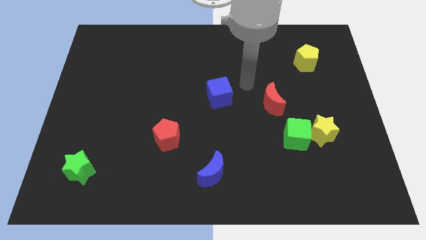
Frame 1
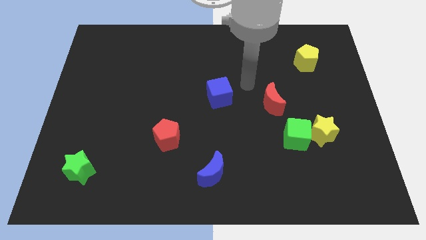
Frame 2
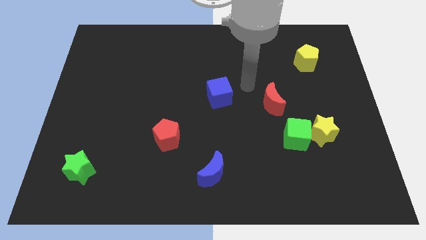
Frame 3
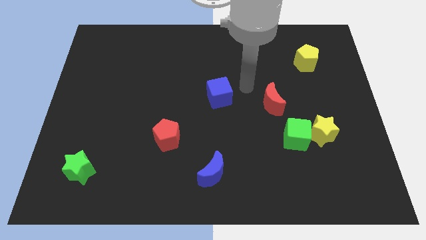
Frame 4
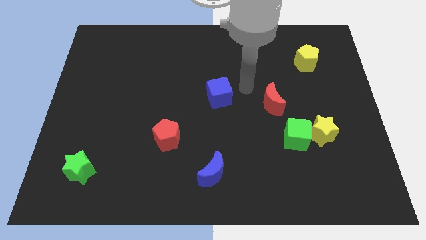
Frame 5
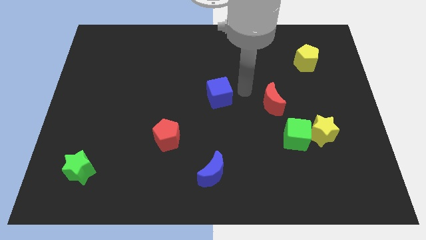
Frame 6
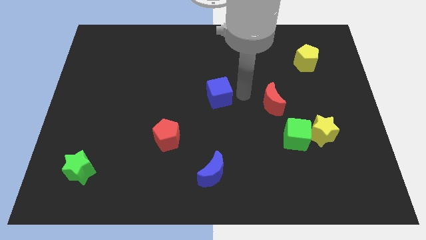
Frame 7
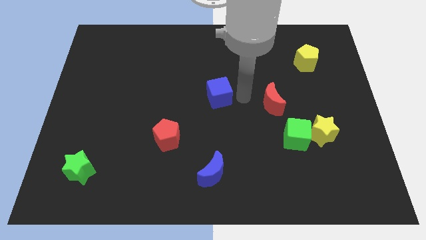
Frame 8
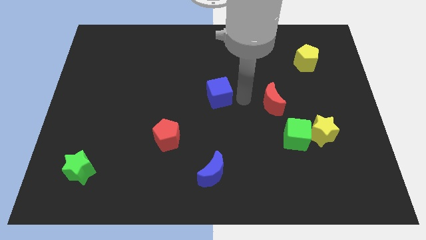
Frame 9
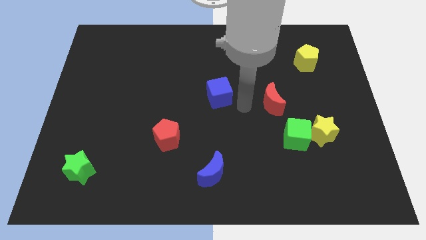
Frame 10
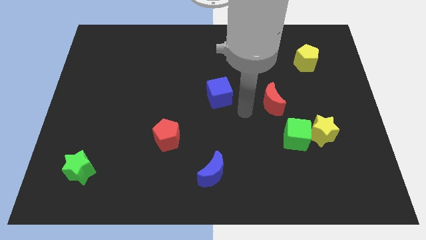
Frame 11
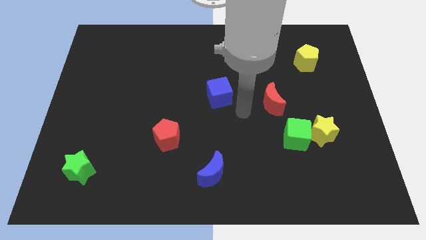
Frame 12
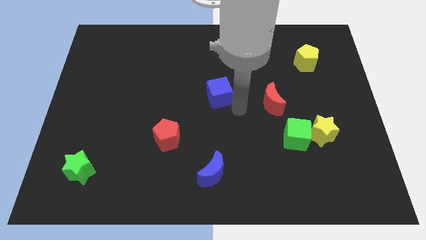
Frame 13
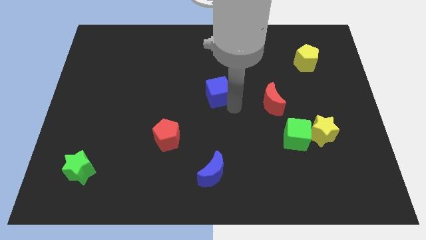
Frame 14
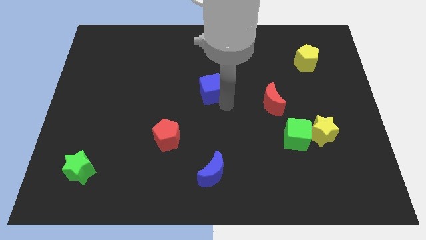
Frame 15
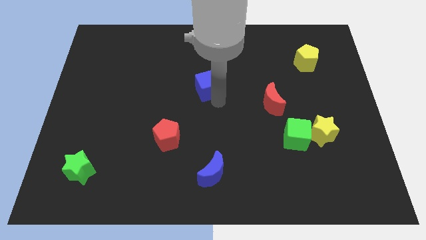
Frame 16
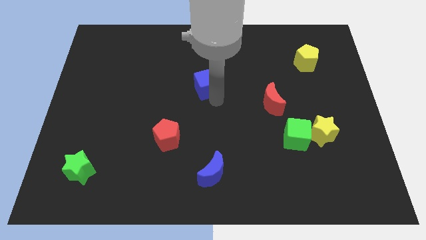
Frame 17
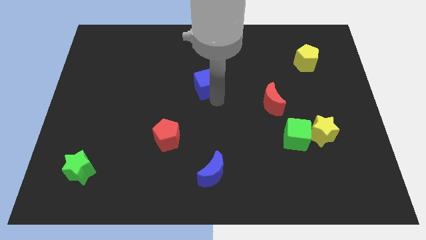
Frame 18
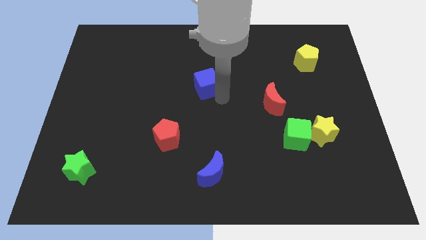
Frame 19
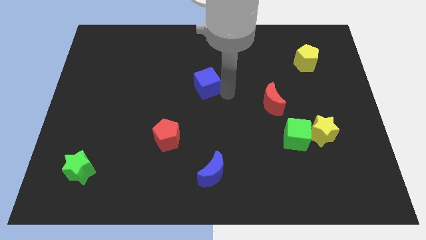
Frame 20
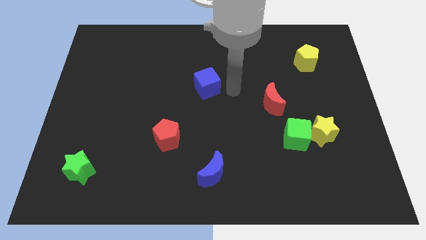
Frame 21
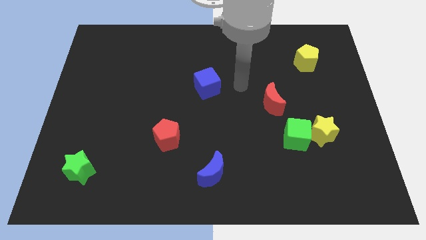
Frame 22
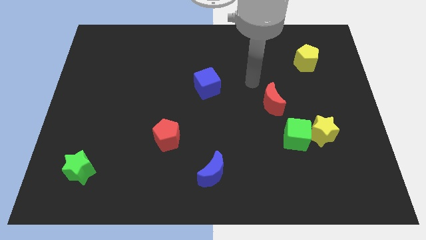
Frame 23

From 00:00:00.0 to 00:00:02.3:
push the blue cube to the center on the board

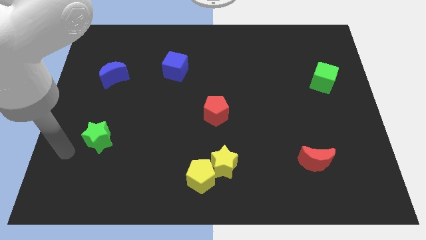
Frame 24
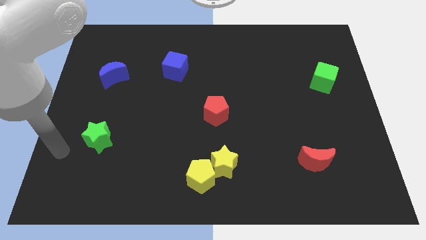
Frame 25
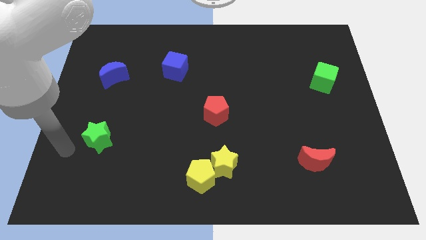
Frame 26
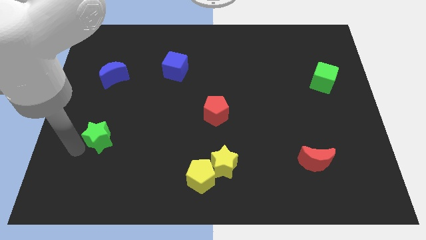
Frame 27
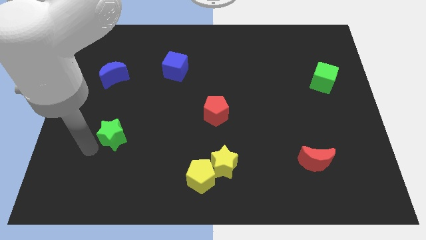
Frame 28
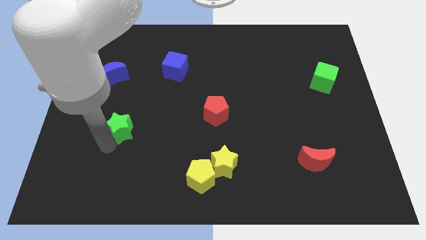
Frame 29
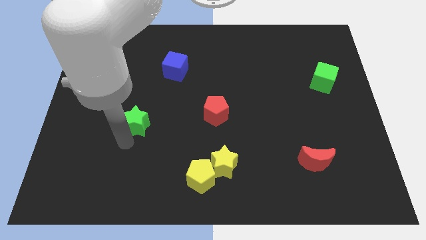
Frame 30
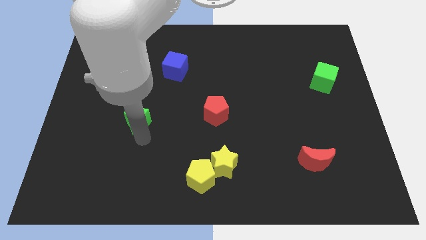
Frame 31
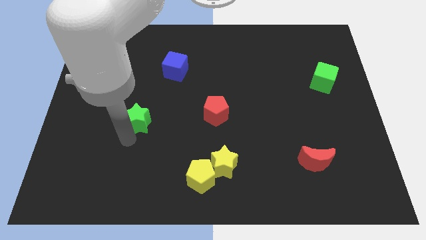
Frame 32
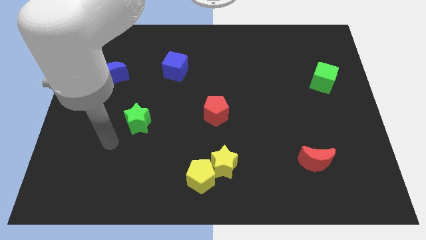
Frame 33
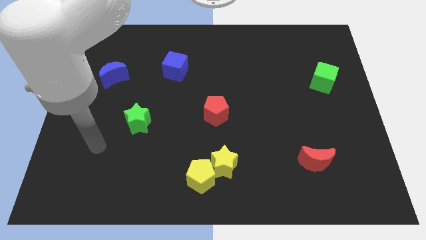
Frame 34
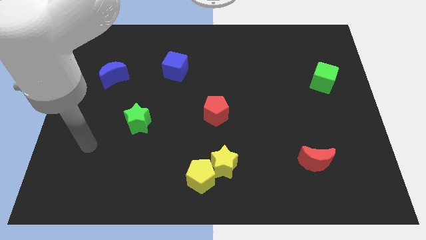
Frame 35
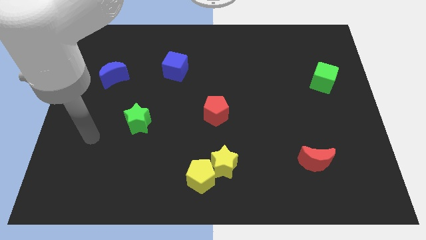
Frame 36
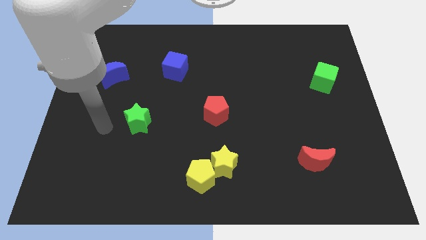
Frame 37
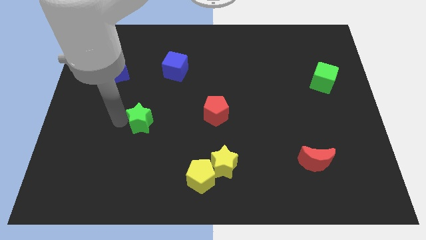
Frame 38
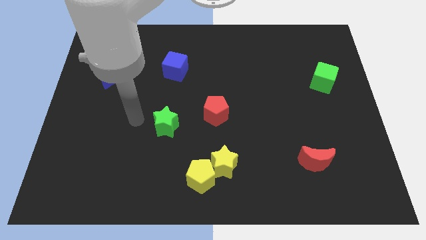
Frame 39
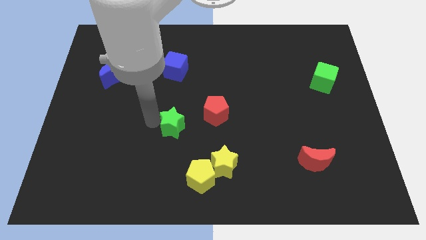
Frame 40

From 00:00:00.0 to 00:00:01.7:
place the green star to the bottom left of the red pentagon

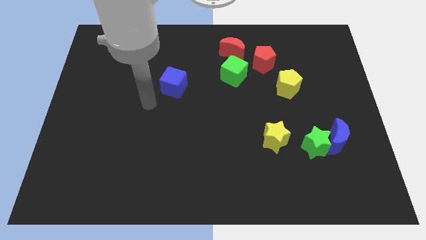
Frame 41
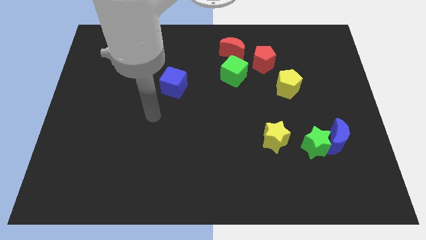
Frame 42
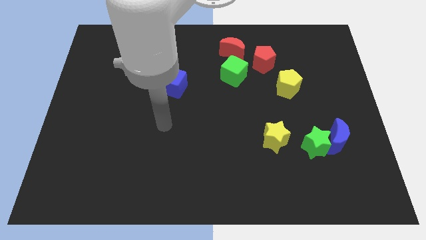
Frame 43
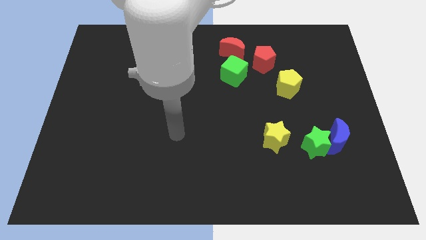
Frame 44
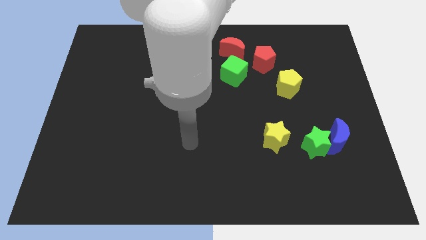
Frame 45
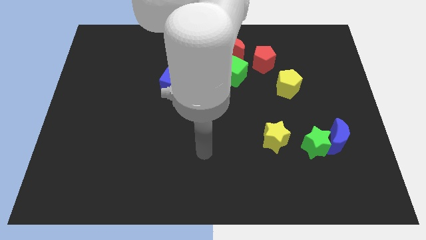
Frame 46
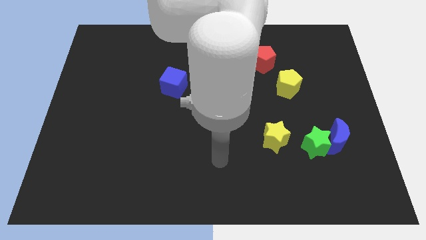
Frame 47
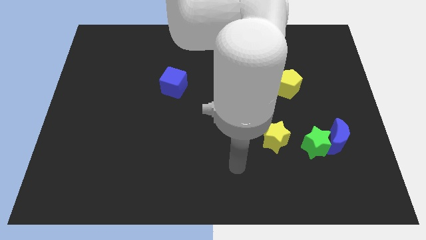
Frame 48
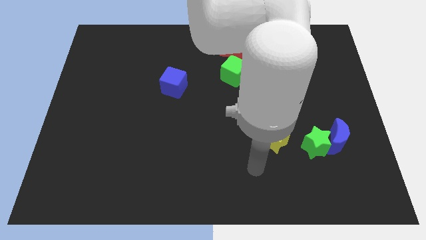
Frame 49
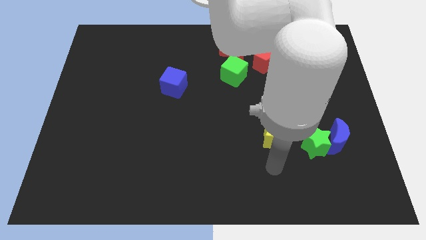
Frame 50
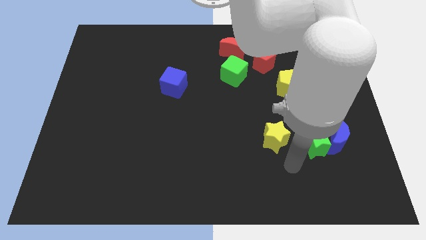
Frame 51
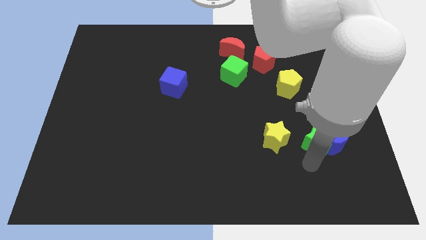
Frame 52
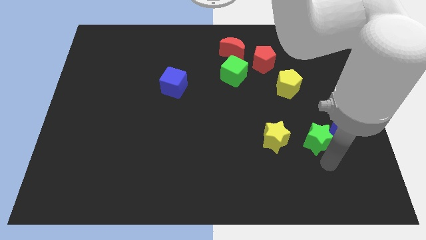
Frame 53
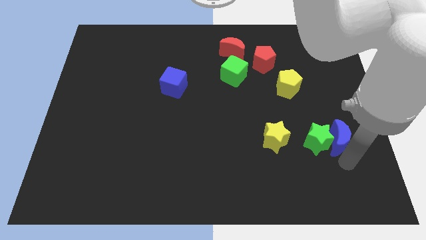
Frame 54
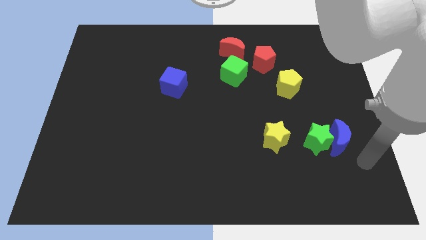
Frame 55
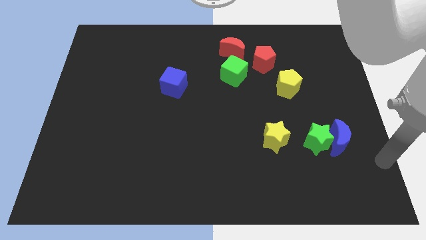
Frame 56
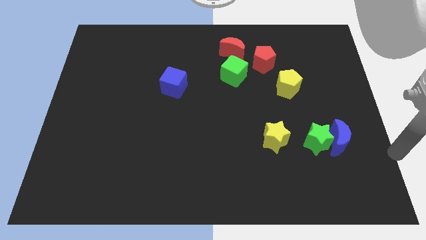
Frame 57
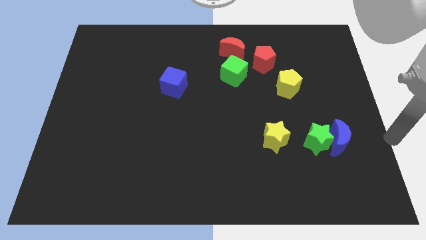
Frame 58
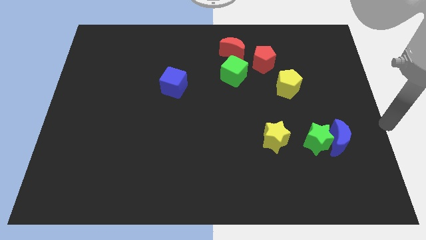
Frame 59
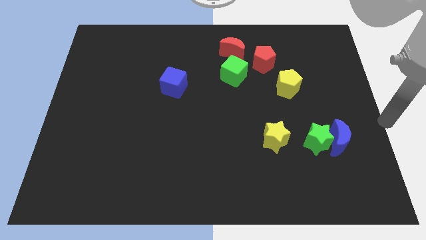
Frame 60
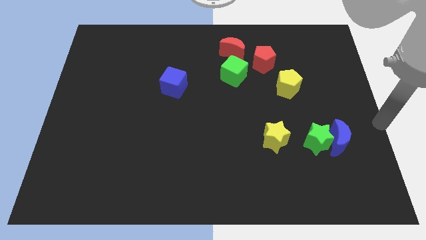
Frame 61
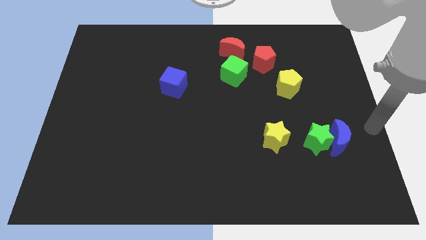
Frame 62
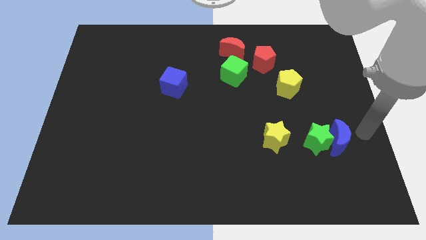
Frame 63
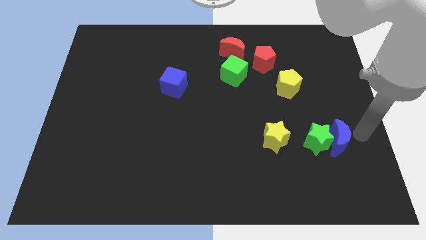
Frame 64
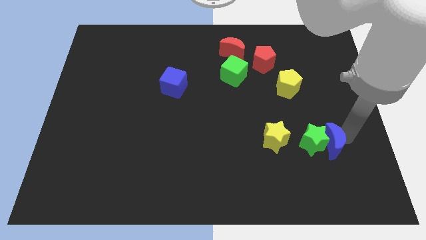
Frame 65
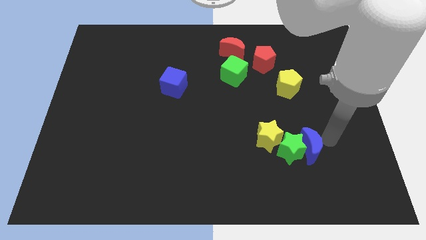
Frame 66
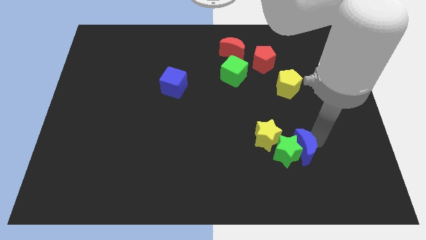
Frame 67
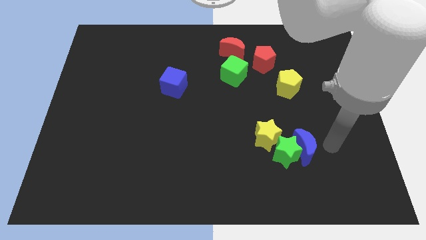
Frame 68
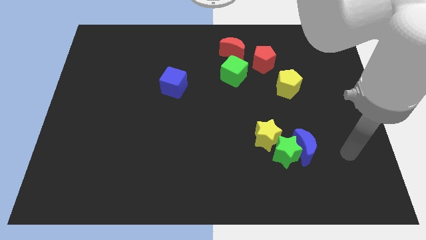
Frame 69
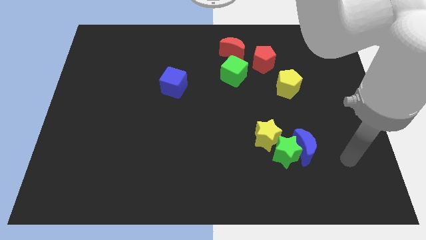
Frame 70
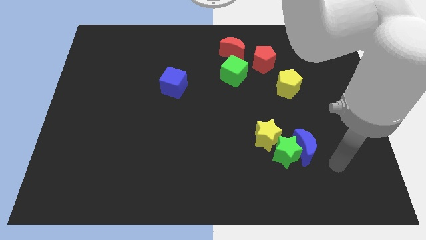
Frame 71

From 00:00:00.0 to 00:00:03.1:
push the blue moon into the green star

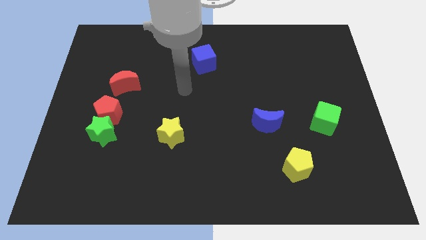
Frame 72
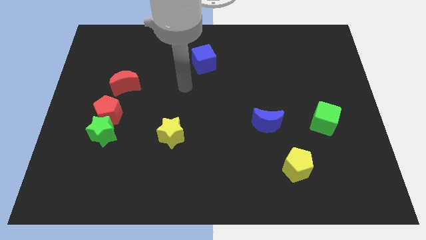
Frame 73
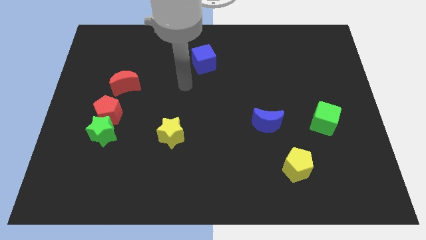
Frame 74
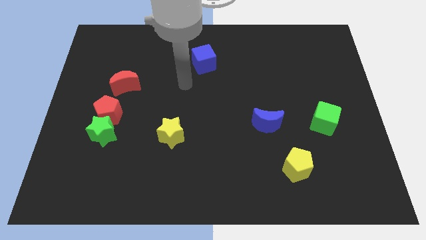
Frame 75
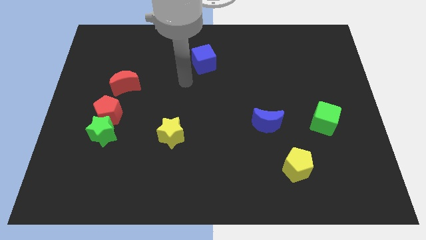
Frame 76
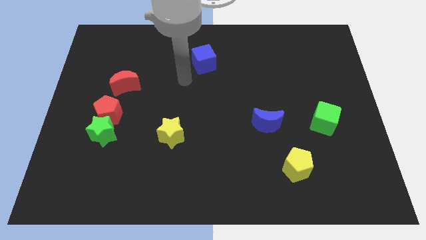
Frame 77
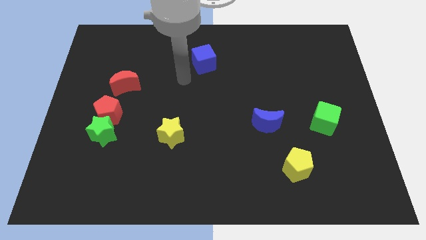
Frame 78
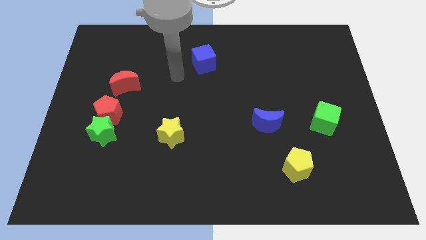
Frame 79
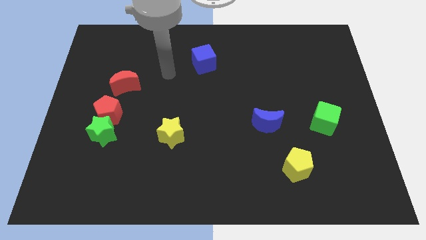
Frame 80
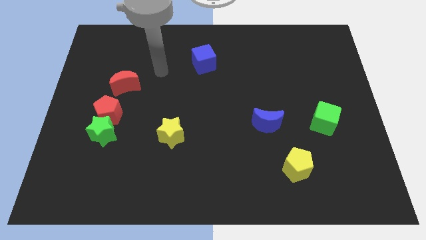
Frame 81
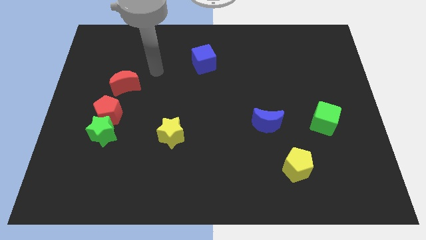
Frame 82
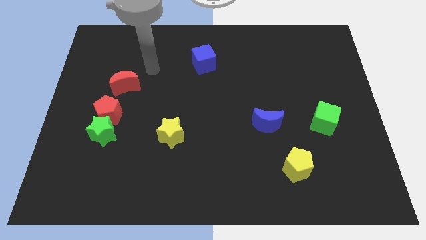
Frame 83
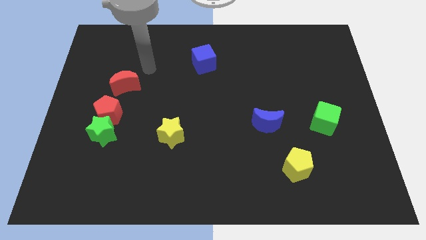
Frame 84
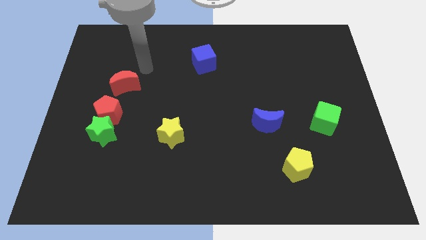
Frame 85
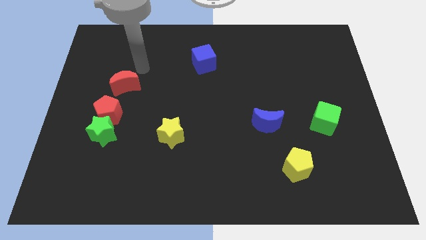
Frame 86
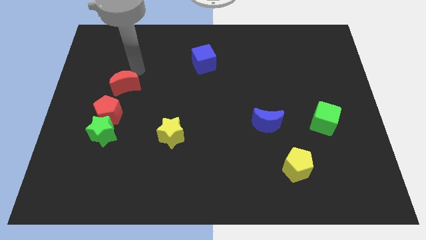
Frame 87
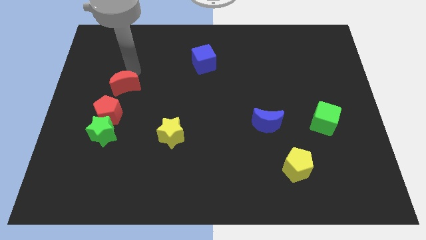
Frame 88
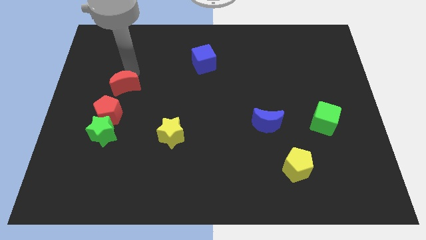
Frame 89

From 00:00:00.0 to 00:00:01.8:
place your arm at the top side of the red crescent
